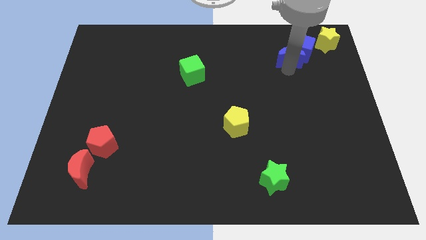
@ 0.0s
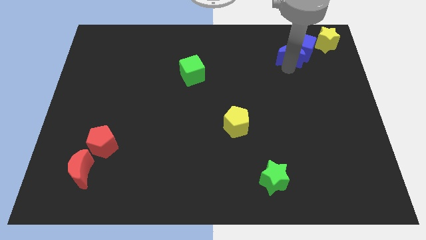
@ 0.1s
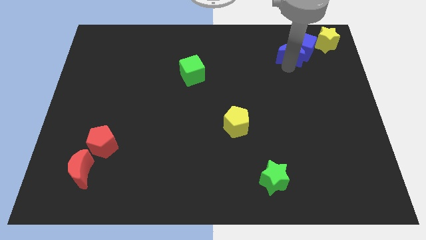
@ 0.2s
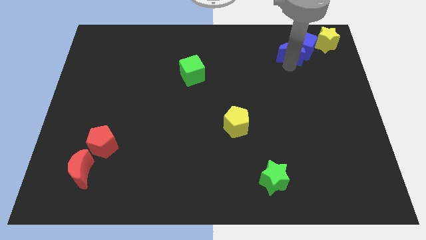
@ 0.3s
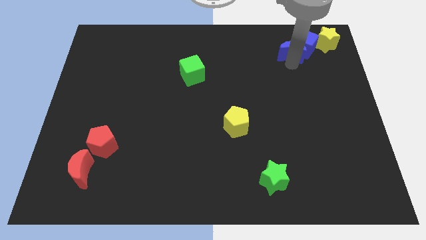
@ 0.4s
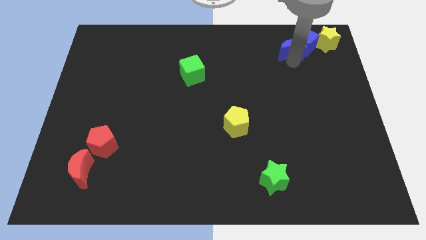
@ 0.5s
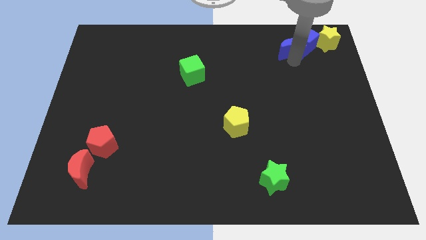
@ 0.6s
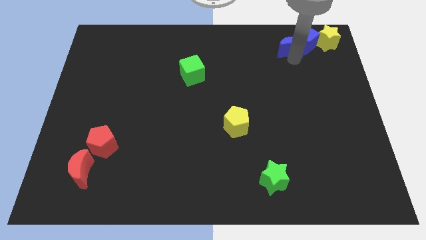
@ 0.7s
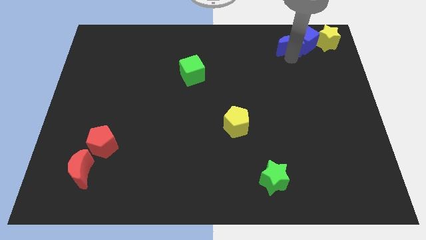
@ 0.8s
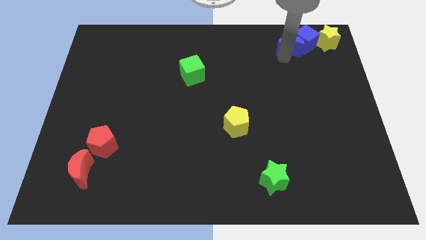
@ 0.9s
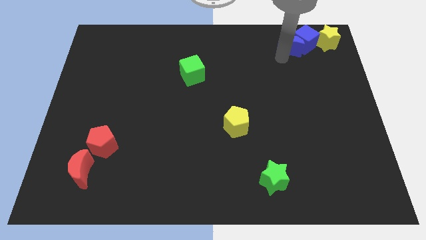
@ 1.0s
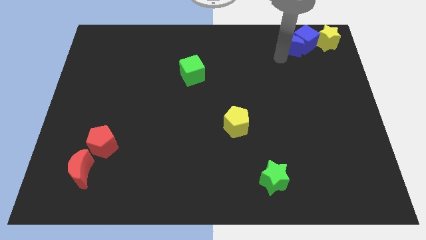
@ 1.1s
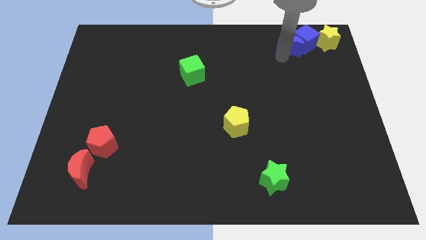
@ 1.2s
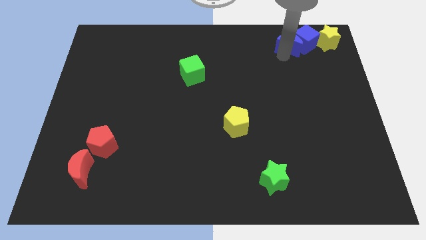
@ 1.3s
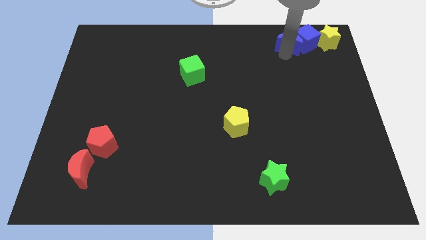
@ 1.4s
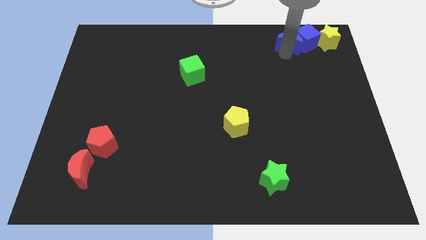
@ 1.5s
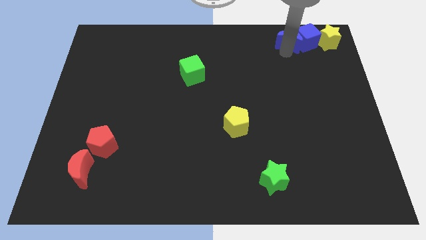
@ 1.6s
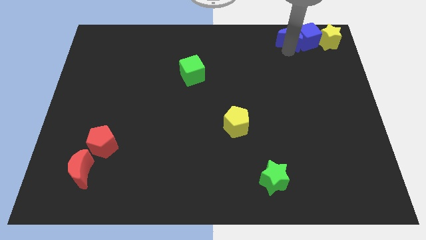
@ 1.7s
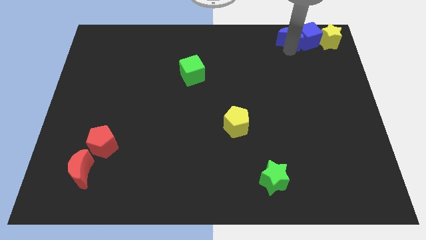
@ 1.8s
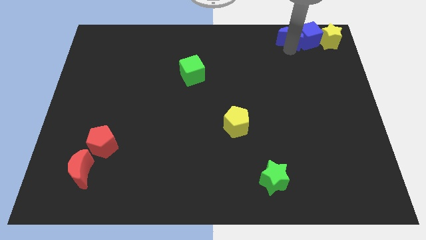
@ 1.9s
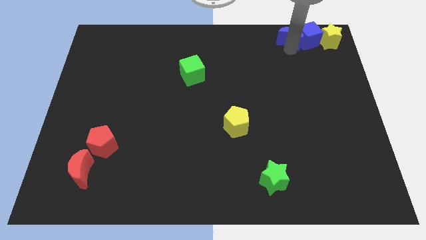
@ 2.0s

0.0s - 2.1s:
place blue moon to the left of blue cube

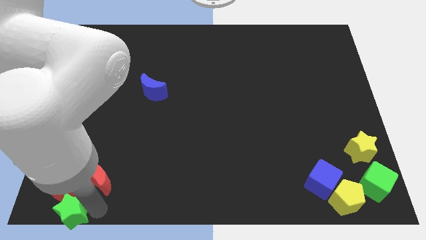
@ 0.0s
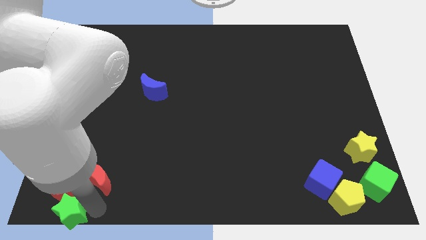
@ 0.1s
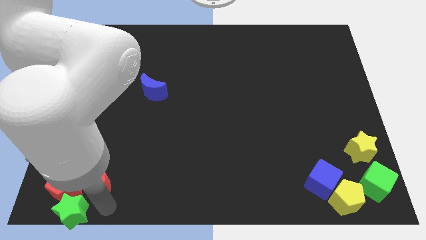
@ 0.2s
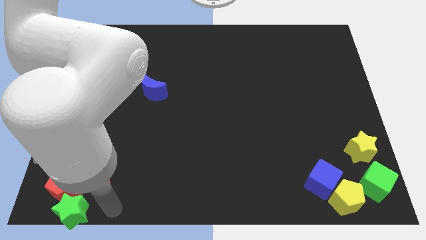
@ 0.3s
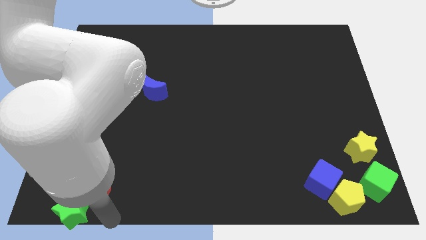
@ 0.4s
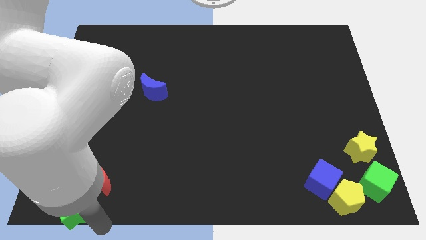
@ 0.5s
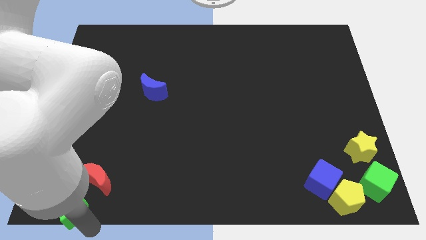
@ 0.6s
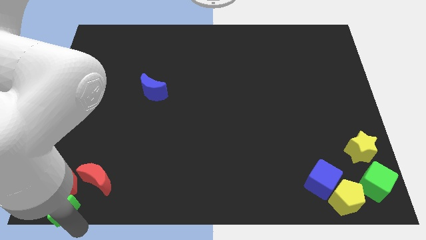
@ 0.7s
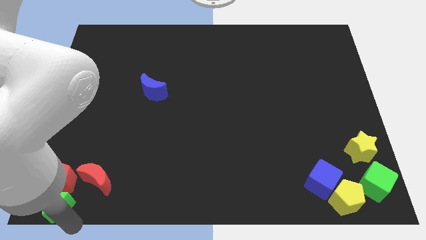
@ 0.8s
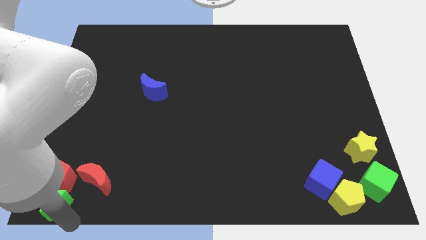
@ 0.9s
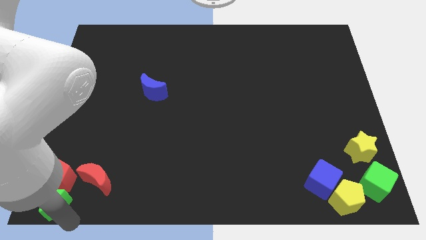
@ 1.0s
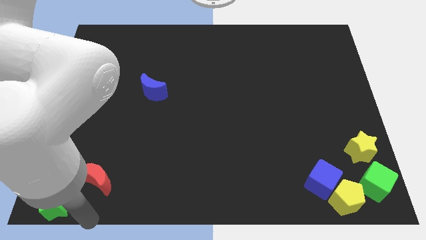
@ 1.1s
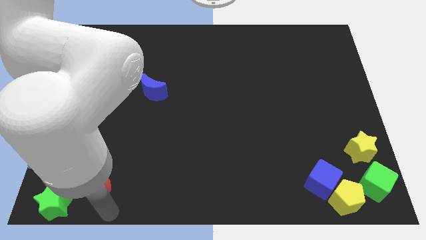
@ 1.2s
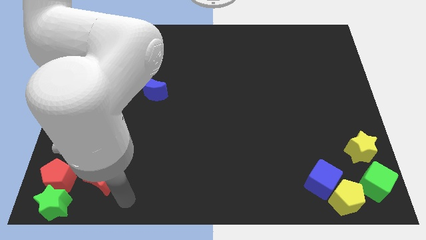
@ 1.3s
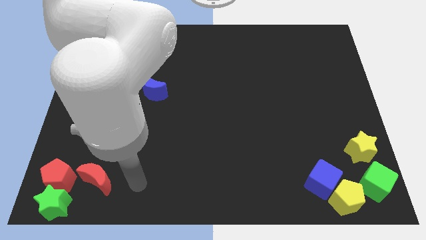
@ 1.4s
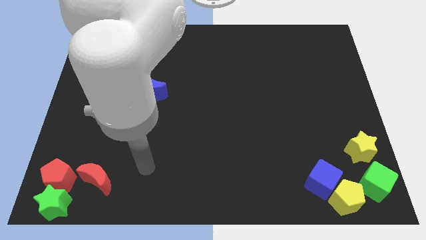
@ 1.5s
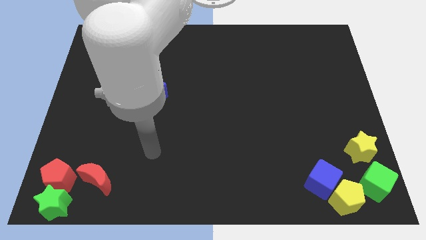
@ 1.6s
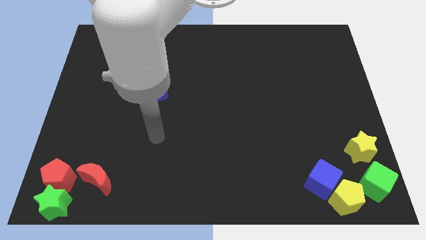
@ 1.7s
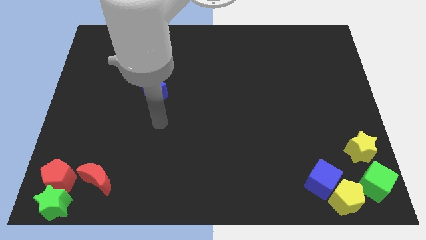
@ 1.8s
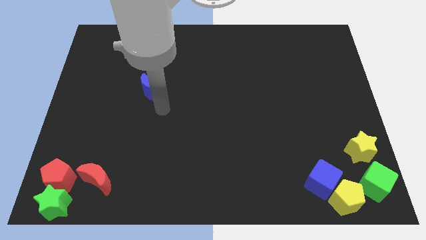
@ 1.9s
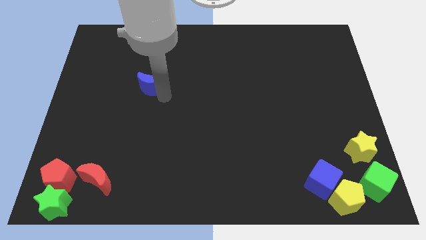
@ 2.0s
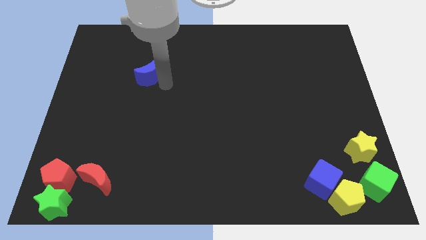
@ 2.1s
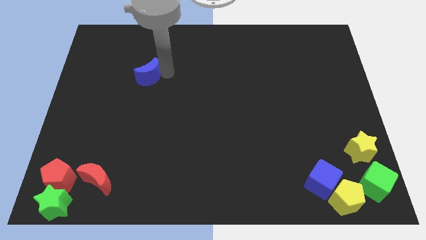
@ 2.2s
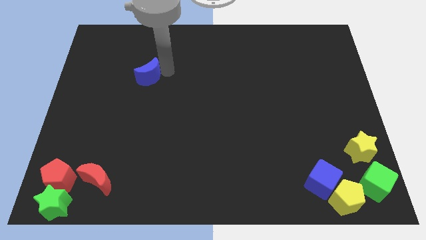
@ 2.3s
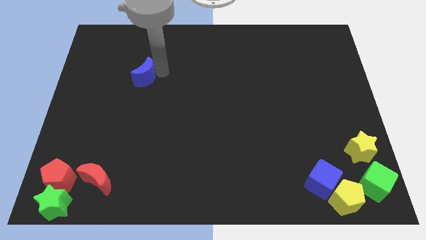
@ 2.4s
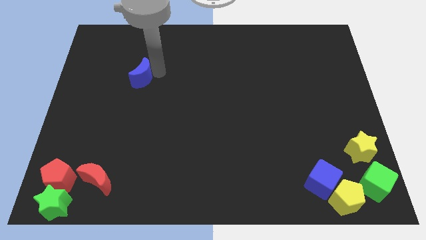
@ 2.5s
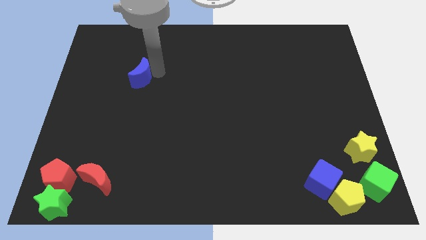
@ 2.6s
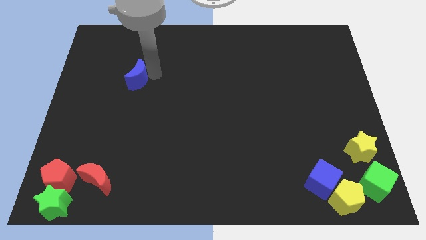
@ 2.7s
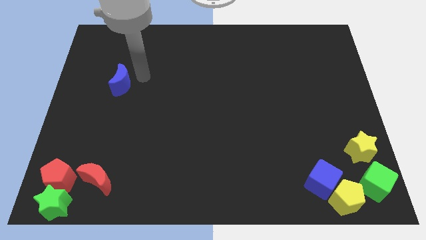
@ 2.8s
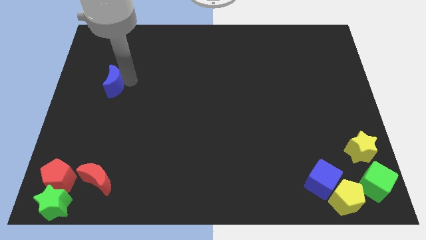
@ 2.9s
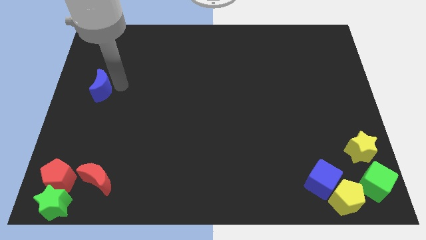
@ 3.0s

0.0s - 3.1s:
push blue crescent above red crescent

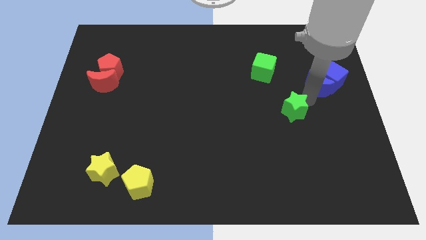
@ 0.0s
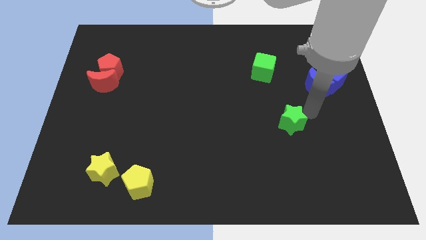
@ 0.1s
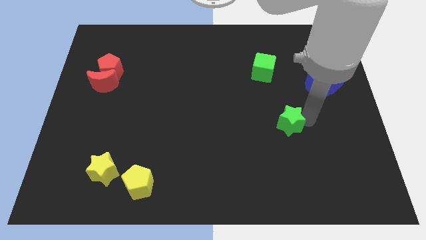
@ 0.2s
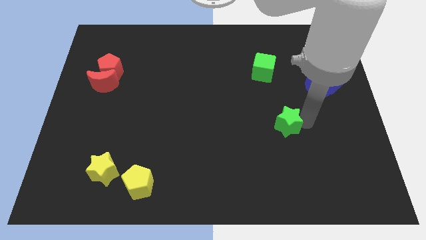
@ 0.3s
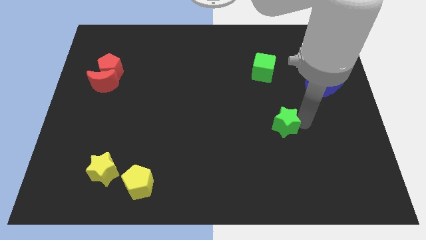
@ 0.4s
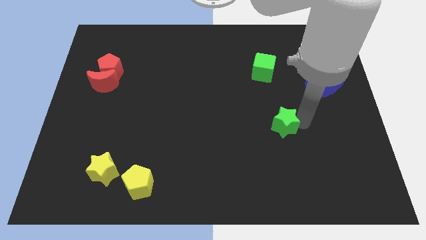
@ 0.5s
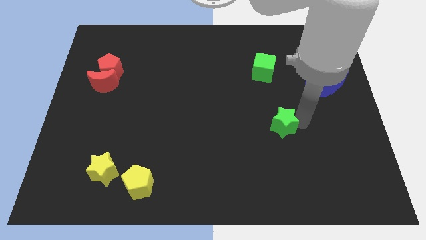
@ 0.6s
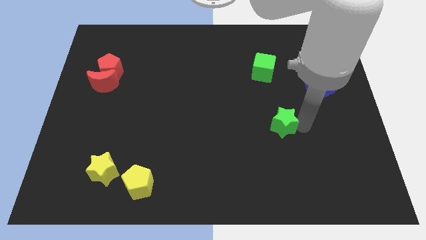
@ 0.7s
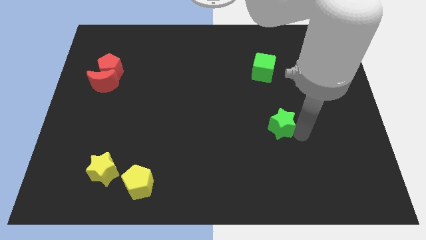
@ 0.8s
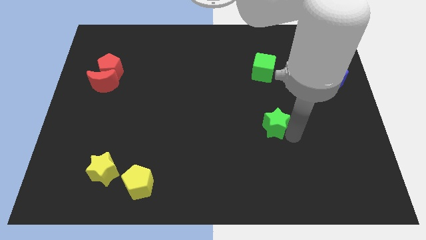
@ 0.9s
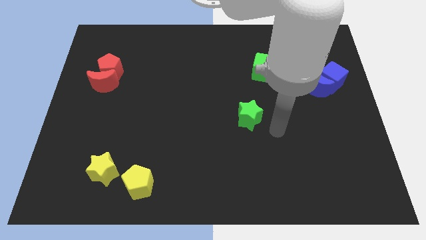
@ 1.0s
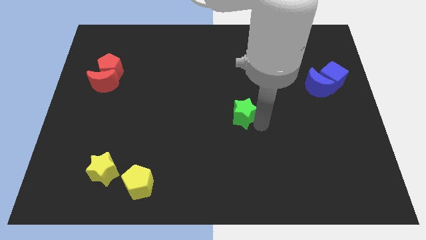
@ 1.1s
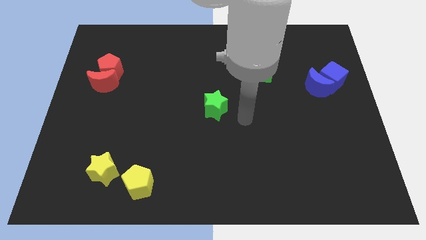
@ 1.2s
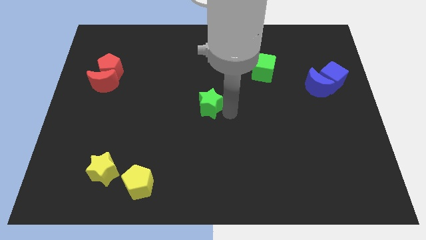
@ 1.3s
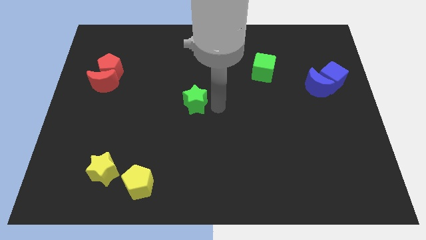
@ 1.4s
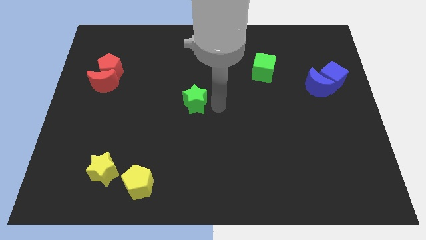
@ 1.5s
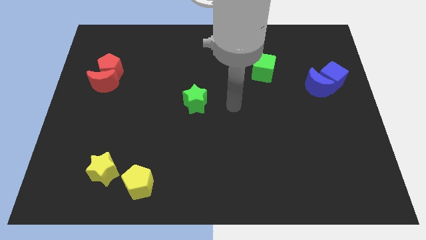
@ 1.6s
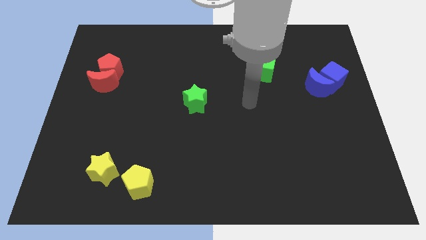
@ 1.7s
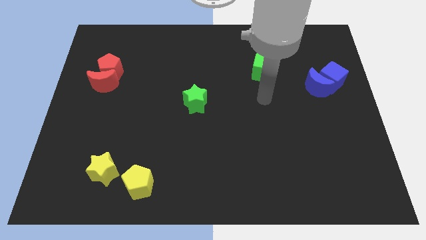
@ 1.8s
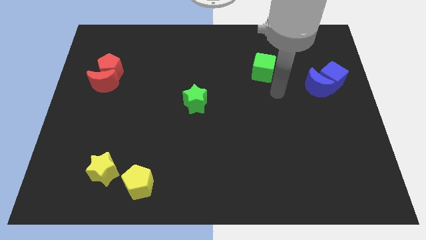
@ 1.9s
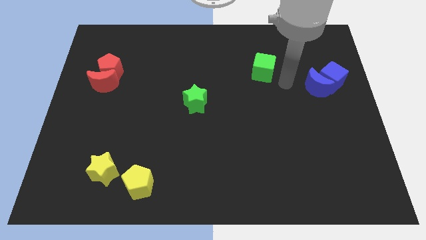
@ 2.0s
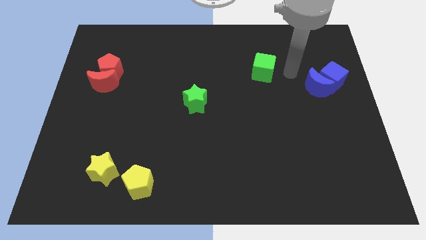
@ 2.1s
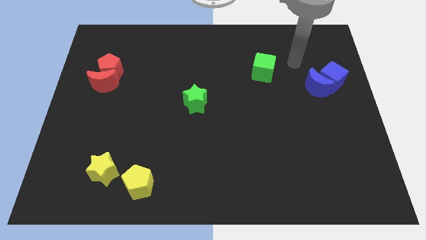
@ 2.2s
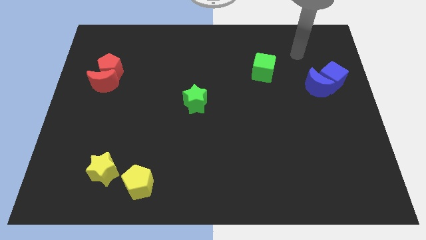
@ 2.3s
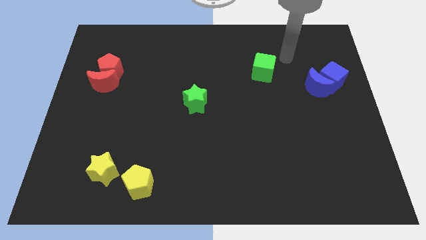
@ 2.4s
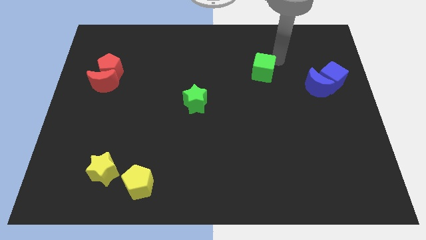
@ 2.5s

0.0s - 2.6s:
push the green star to the center of the board

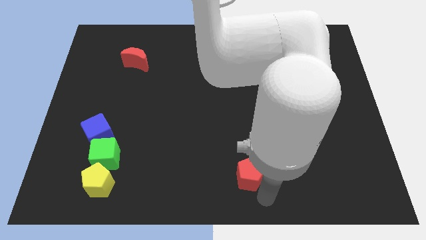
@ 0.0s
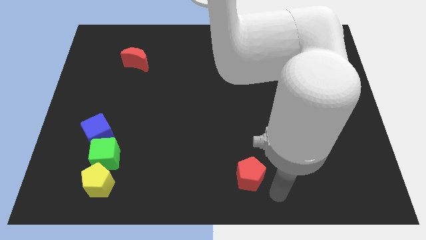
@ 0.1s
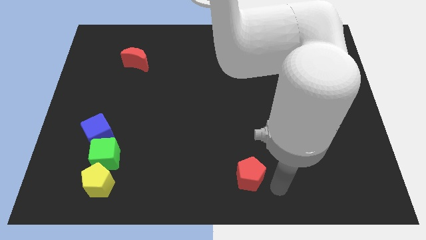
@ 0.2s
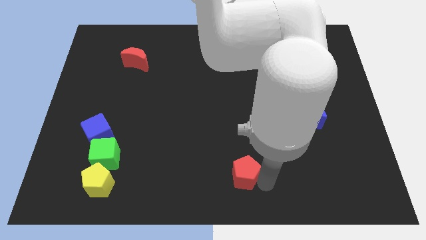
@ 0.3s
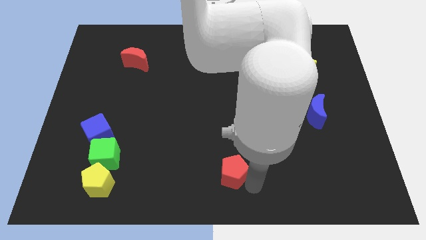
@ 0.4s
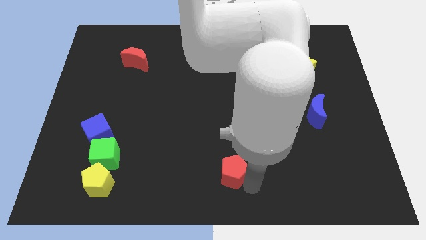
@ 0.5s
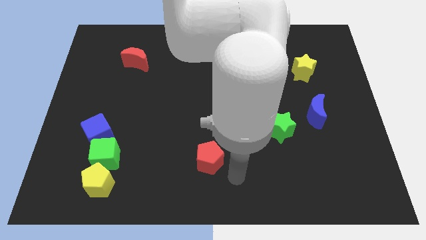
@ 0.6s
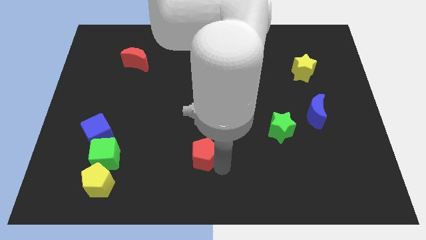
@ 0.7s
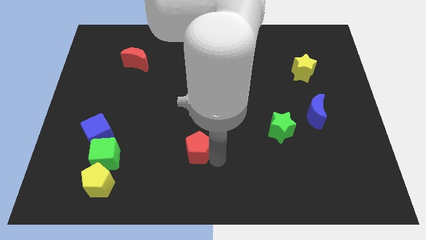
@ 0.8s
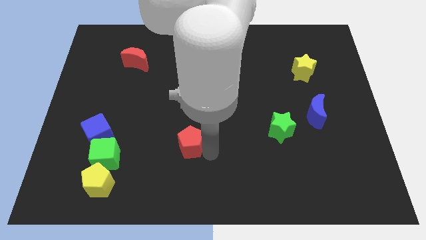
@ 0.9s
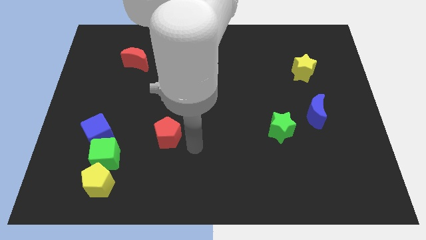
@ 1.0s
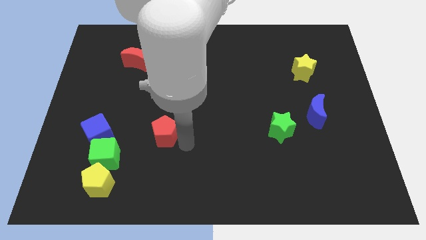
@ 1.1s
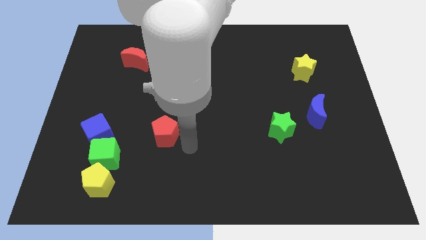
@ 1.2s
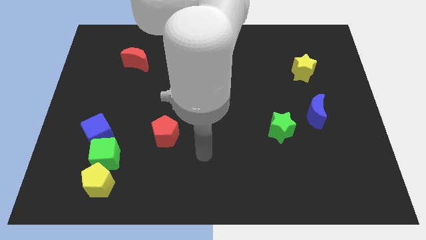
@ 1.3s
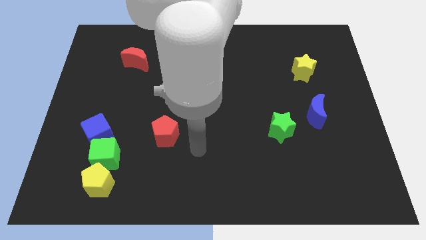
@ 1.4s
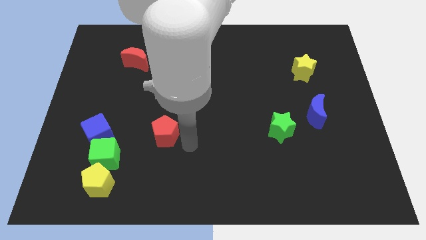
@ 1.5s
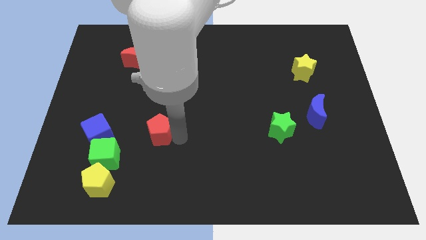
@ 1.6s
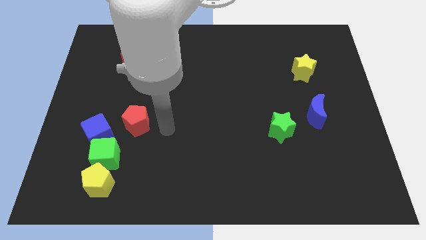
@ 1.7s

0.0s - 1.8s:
push the red pentagon horizontally to the left side of the green star
